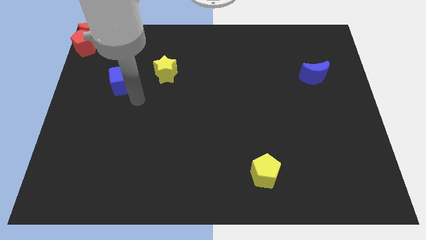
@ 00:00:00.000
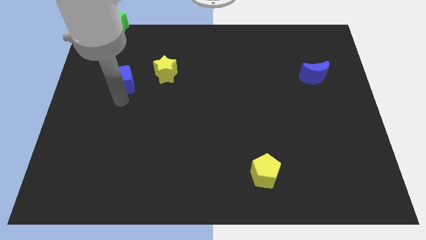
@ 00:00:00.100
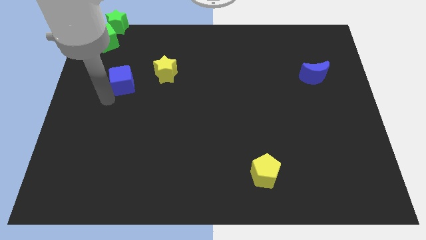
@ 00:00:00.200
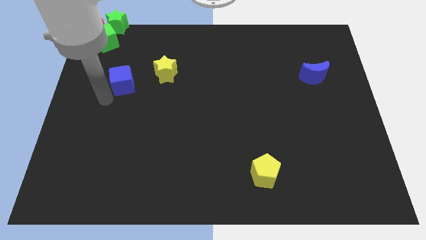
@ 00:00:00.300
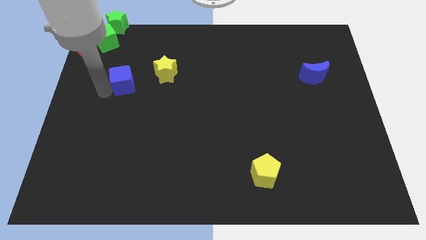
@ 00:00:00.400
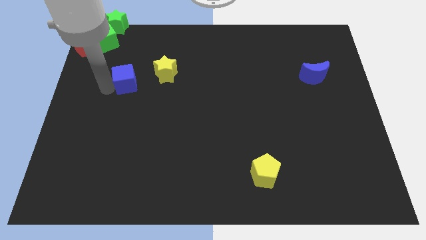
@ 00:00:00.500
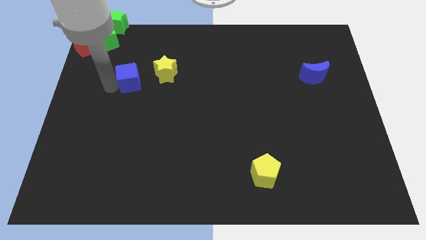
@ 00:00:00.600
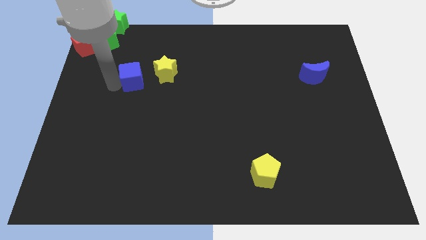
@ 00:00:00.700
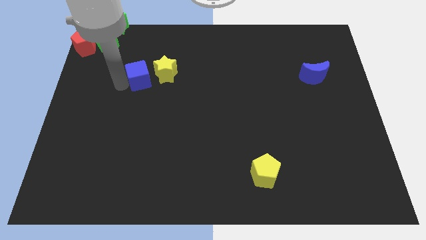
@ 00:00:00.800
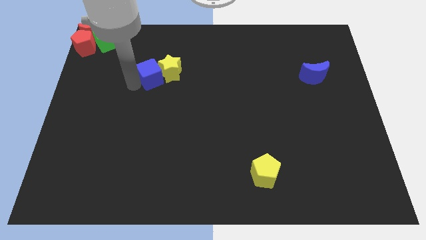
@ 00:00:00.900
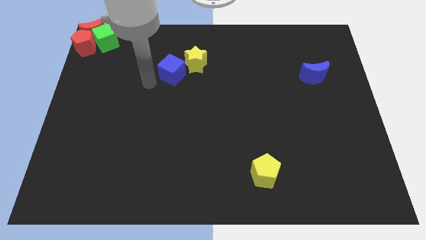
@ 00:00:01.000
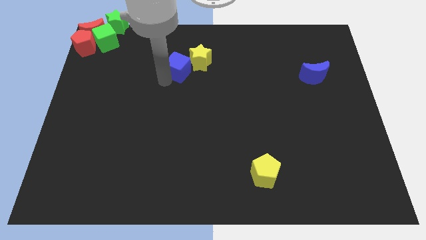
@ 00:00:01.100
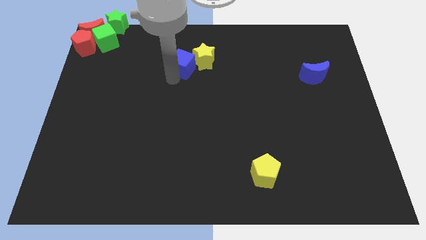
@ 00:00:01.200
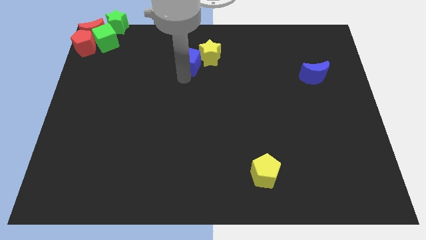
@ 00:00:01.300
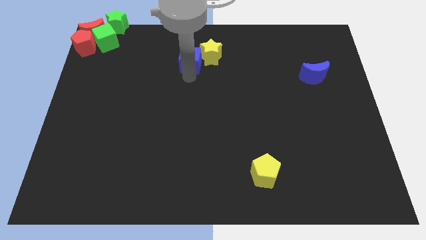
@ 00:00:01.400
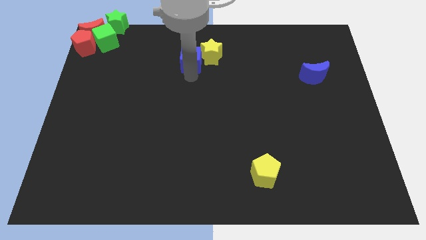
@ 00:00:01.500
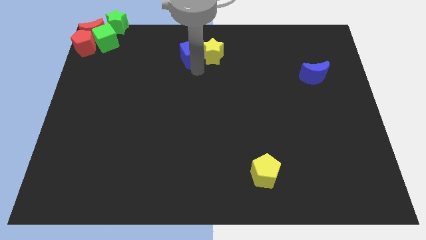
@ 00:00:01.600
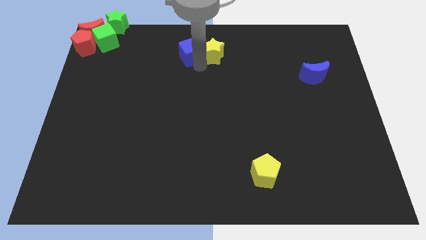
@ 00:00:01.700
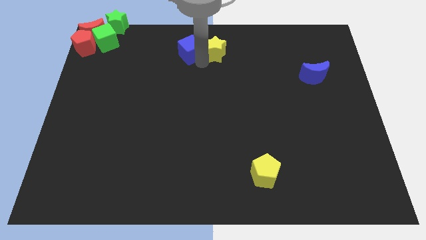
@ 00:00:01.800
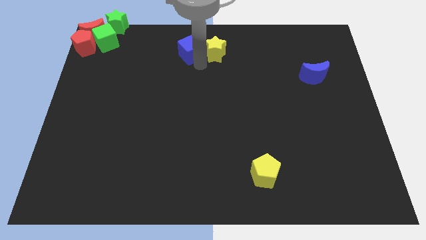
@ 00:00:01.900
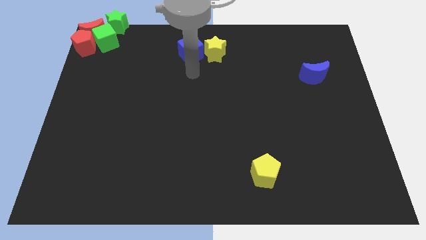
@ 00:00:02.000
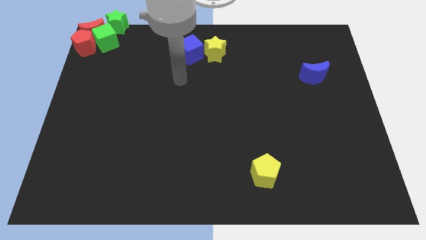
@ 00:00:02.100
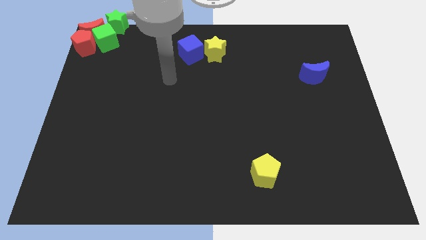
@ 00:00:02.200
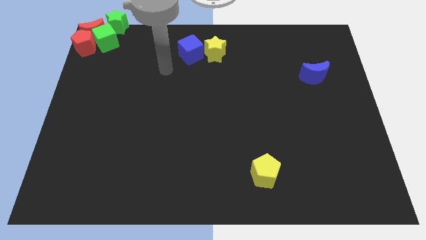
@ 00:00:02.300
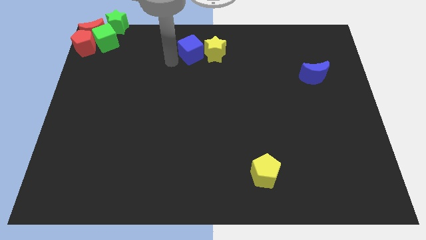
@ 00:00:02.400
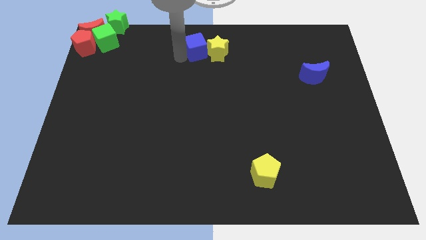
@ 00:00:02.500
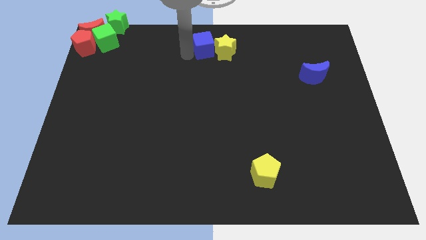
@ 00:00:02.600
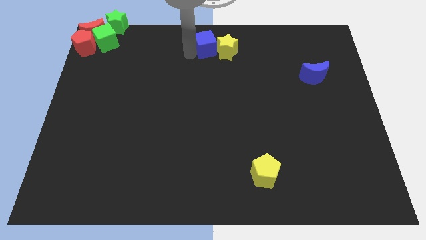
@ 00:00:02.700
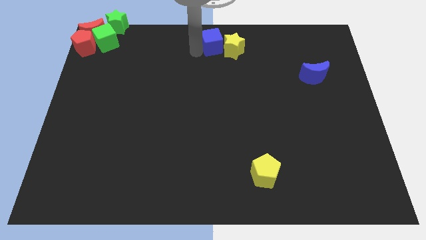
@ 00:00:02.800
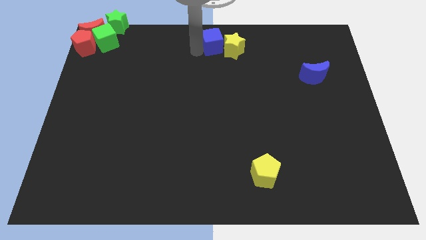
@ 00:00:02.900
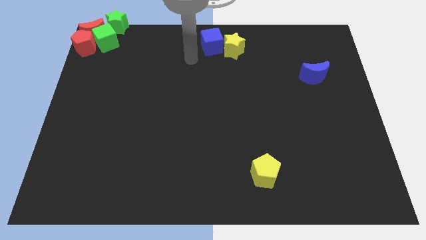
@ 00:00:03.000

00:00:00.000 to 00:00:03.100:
move the blue cube along with the yellow star to the top center of the board

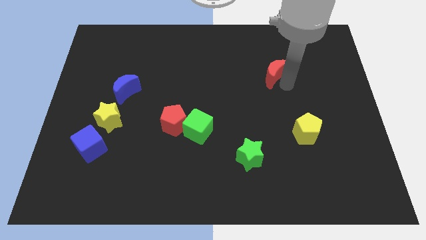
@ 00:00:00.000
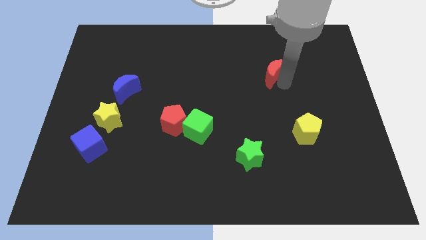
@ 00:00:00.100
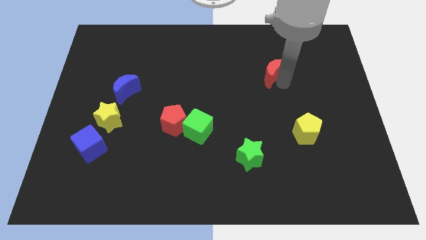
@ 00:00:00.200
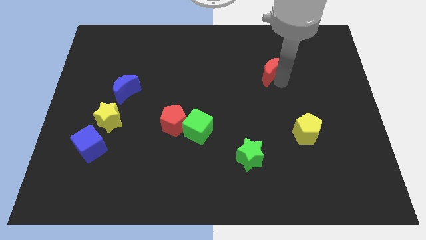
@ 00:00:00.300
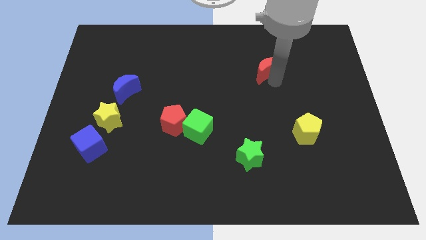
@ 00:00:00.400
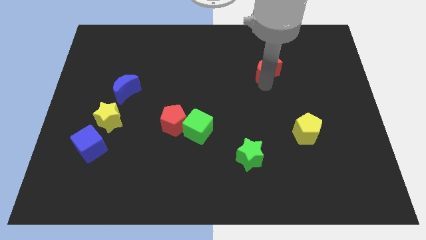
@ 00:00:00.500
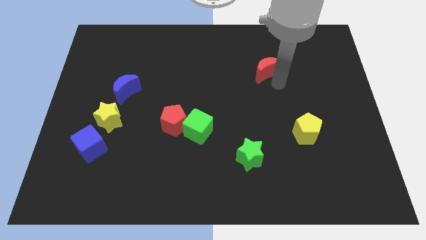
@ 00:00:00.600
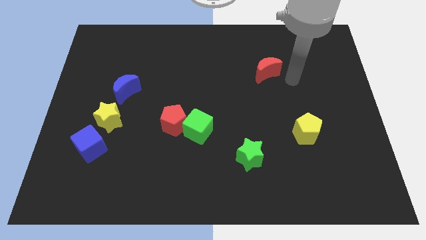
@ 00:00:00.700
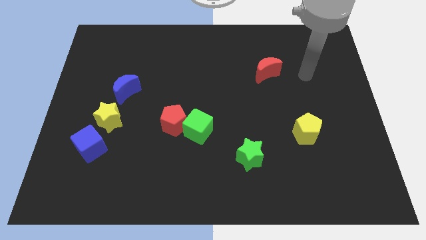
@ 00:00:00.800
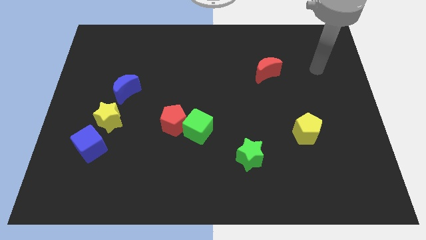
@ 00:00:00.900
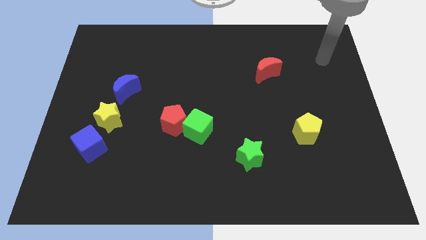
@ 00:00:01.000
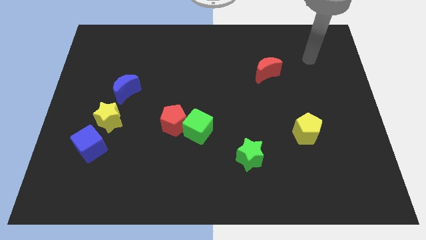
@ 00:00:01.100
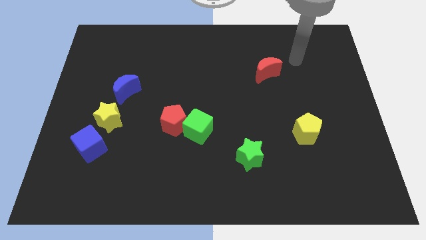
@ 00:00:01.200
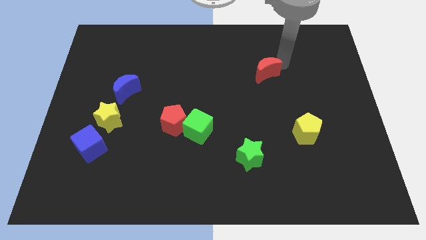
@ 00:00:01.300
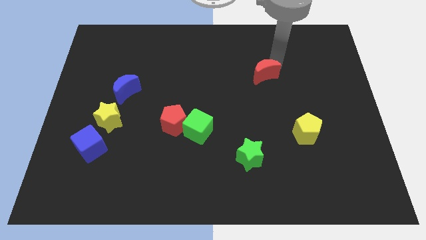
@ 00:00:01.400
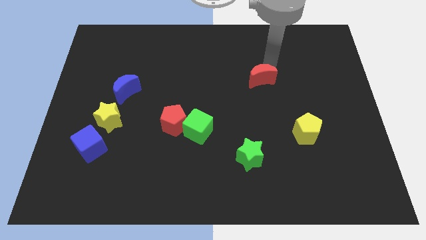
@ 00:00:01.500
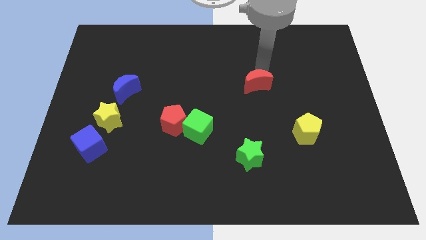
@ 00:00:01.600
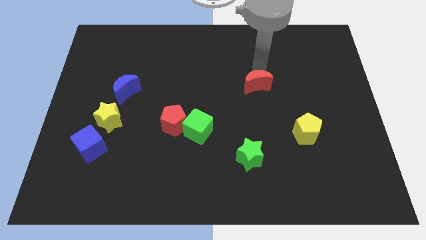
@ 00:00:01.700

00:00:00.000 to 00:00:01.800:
place the red moon above the green star

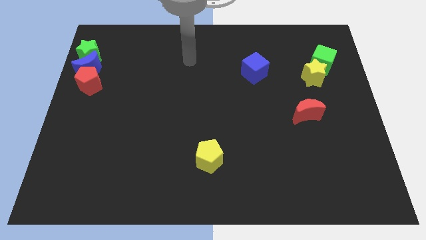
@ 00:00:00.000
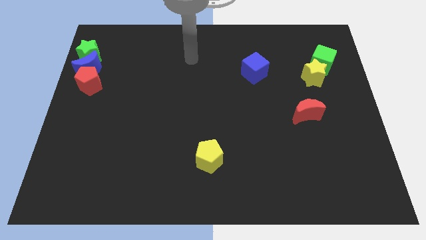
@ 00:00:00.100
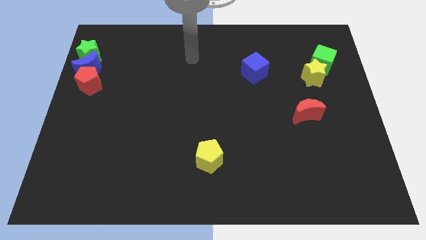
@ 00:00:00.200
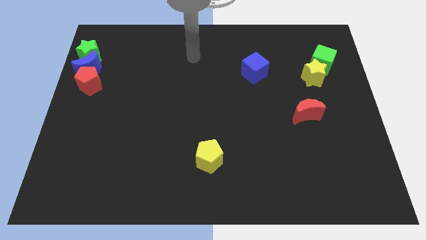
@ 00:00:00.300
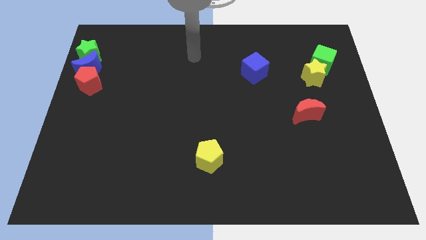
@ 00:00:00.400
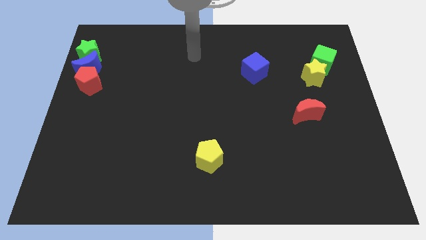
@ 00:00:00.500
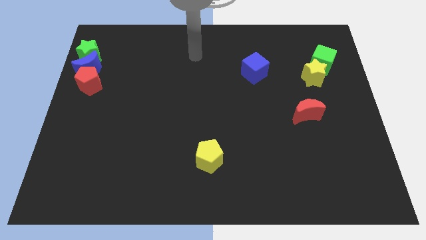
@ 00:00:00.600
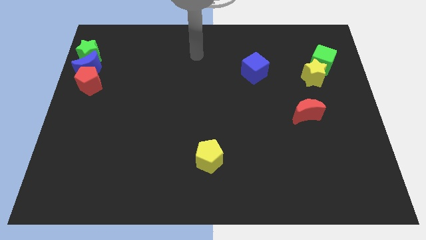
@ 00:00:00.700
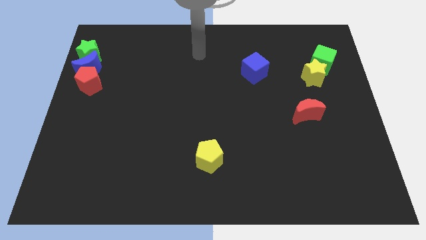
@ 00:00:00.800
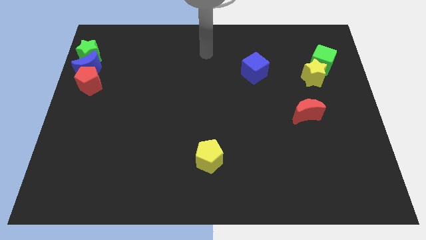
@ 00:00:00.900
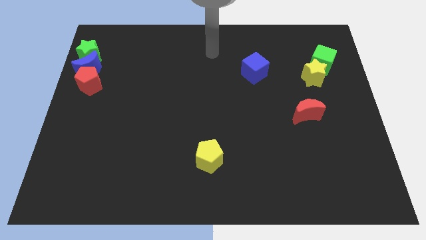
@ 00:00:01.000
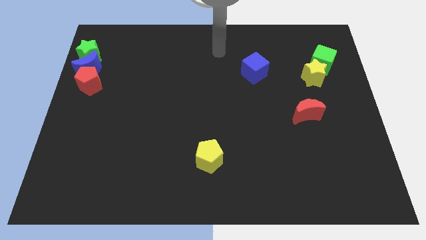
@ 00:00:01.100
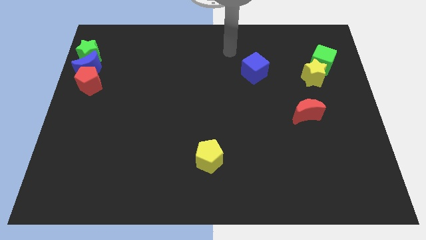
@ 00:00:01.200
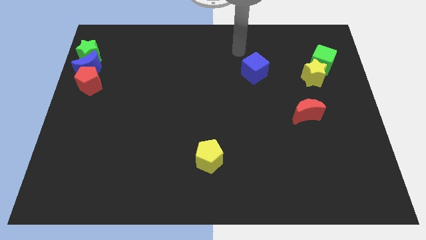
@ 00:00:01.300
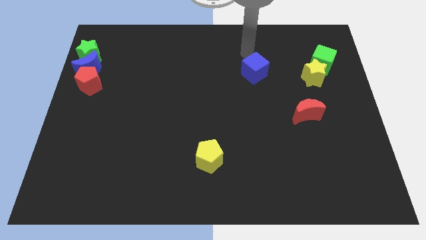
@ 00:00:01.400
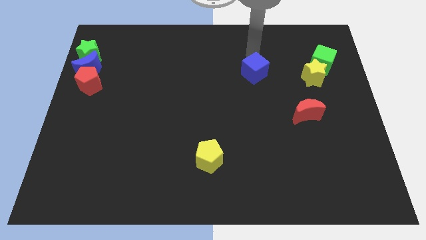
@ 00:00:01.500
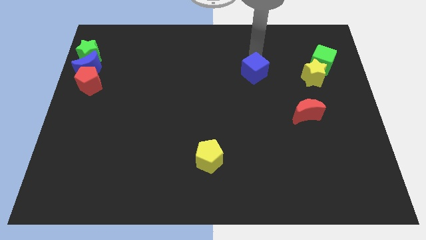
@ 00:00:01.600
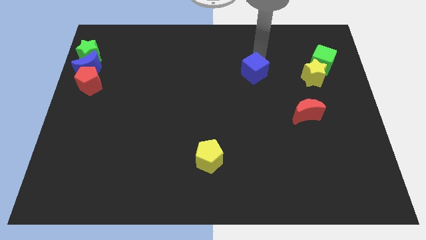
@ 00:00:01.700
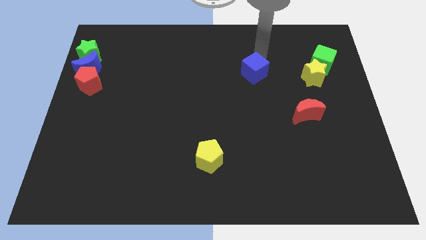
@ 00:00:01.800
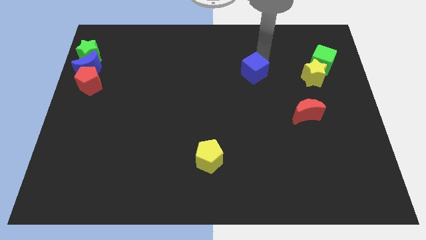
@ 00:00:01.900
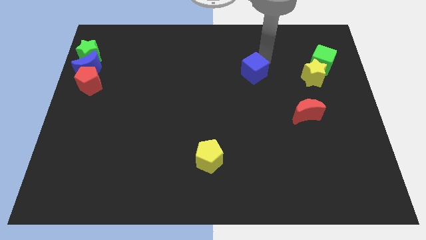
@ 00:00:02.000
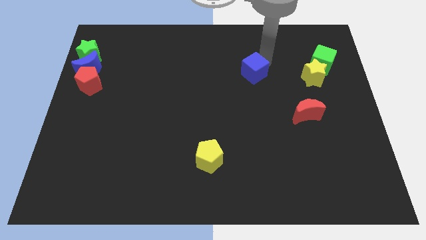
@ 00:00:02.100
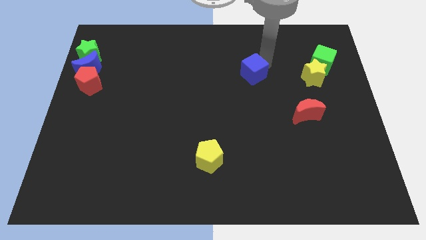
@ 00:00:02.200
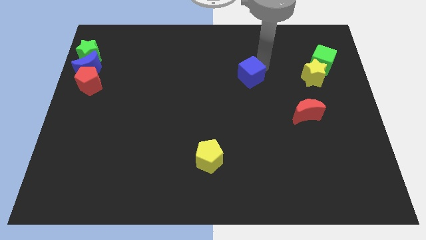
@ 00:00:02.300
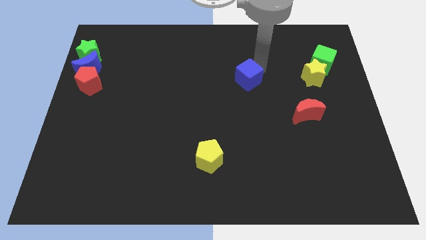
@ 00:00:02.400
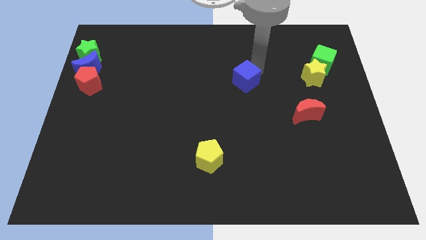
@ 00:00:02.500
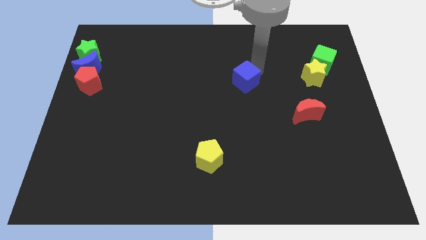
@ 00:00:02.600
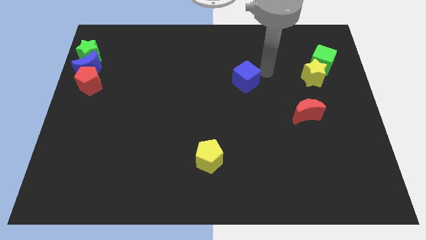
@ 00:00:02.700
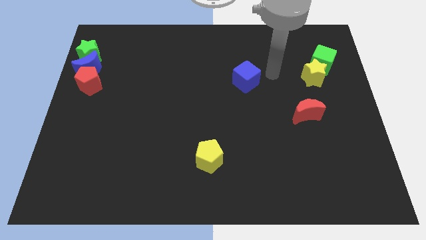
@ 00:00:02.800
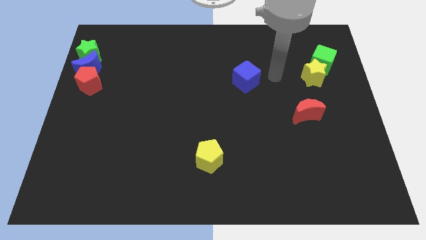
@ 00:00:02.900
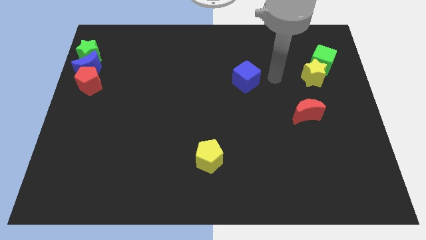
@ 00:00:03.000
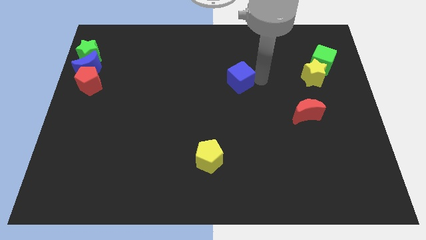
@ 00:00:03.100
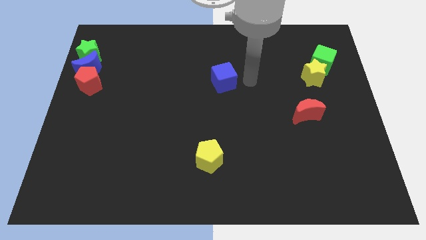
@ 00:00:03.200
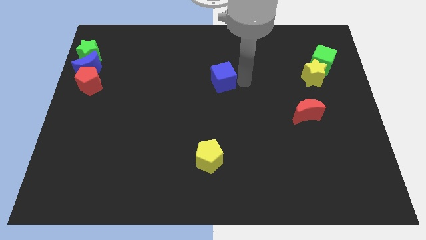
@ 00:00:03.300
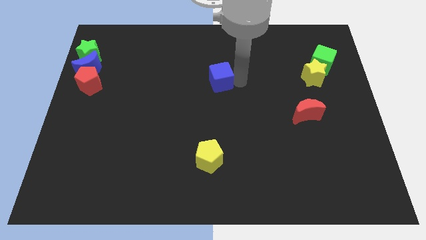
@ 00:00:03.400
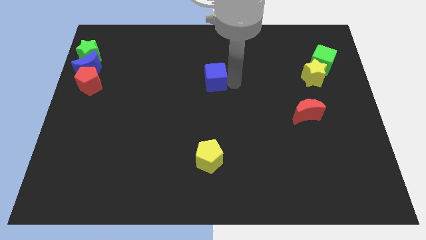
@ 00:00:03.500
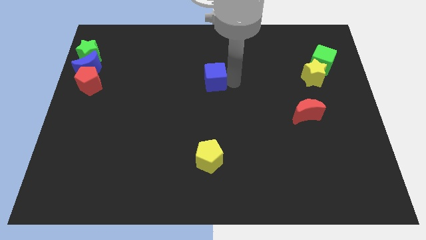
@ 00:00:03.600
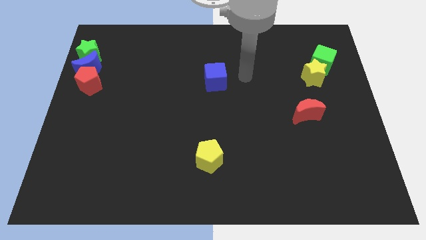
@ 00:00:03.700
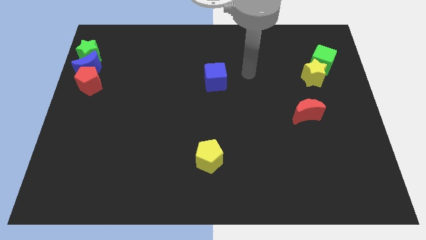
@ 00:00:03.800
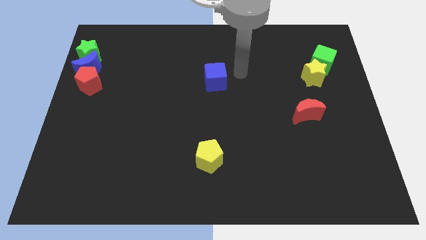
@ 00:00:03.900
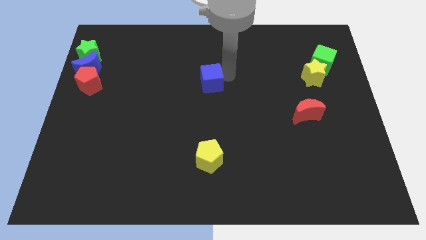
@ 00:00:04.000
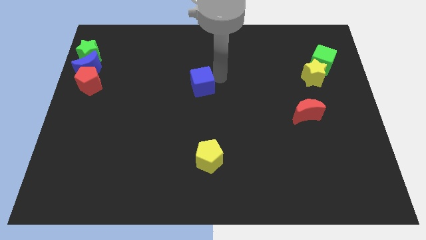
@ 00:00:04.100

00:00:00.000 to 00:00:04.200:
push the blue cube towards the left of yellow star horizontally
